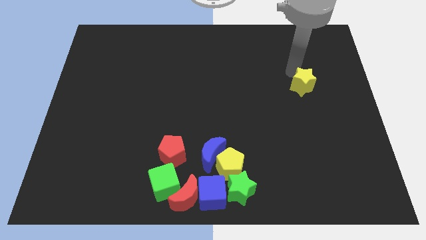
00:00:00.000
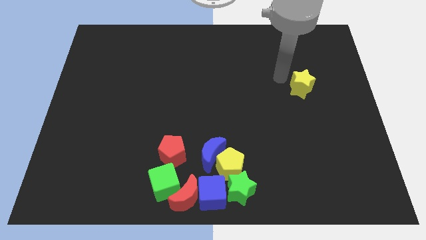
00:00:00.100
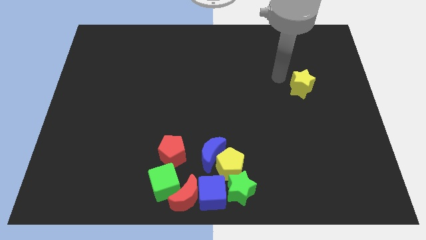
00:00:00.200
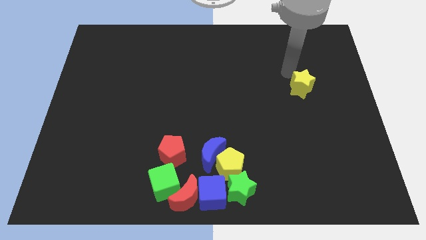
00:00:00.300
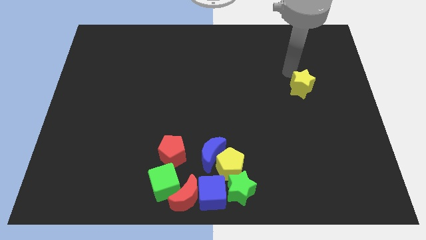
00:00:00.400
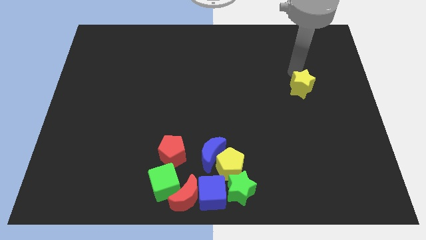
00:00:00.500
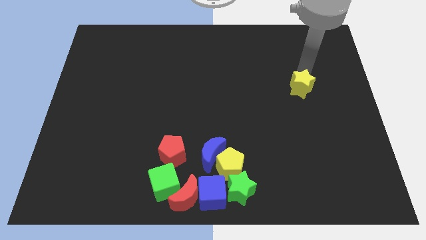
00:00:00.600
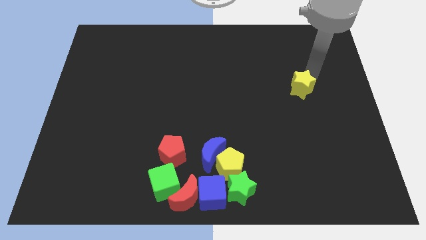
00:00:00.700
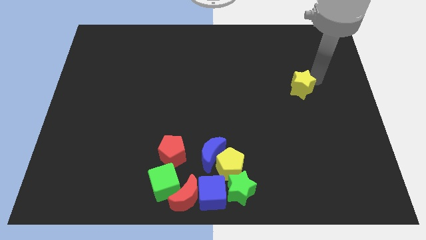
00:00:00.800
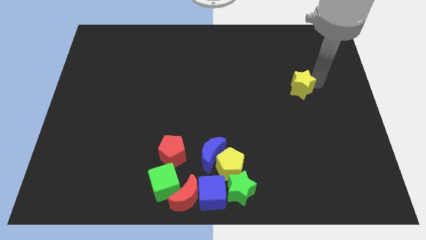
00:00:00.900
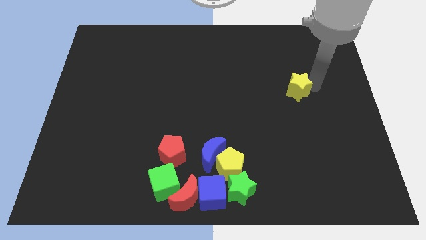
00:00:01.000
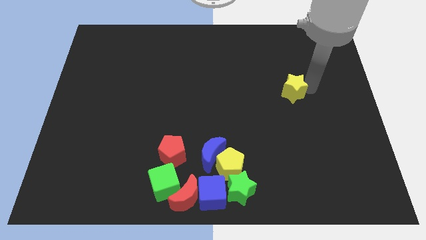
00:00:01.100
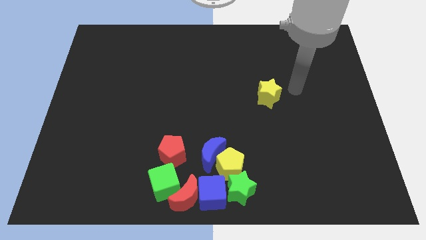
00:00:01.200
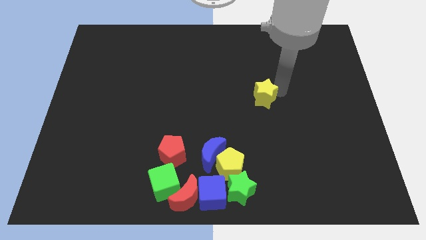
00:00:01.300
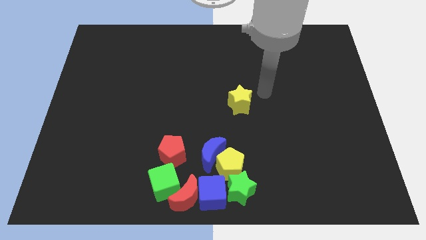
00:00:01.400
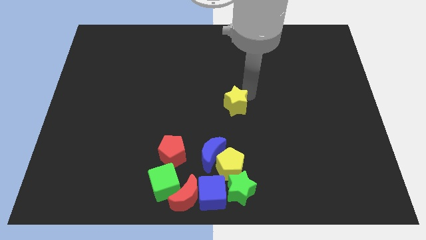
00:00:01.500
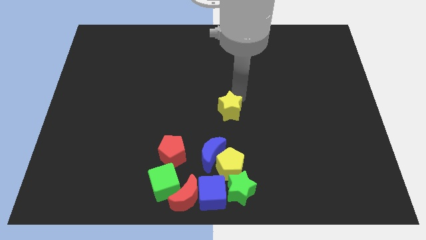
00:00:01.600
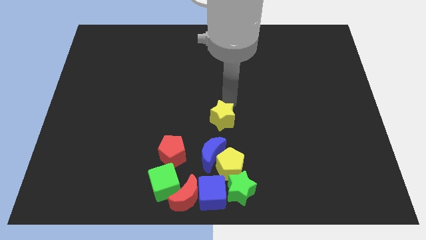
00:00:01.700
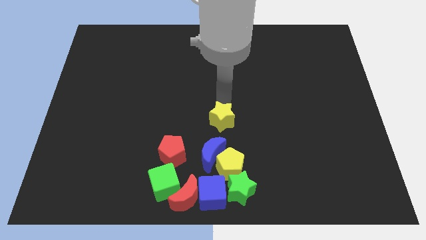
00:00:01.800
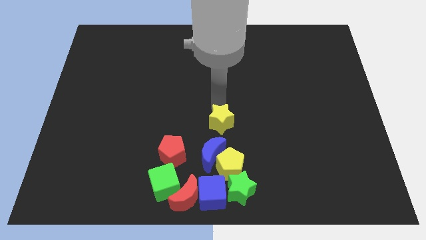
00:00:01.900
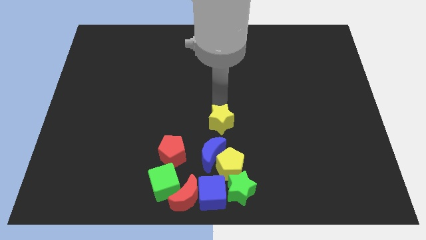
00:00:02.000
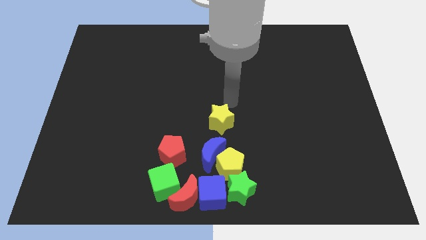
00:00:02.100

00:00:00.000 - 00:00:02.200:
move the yellow star above the blue crescent

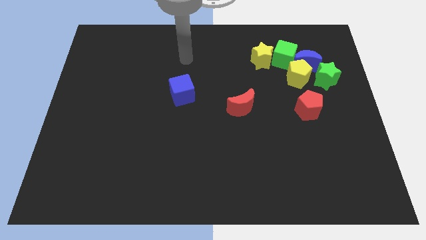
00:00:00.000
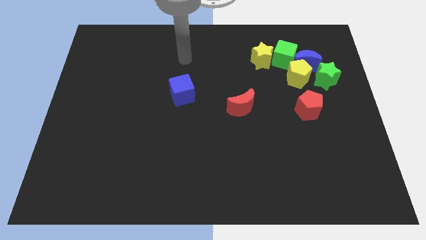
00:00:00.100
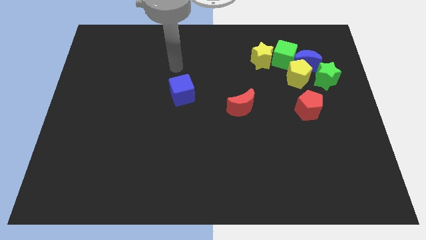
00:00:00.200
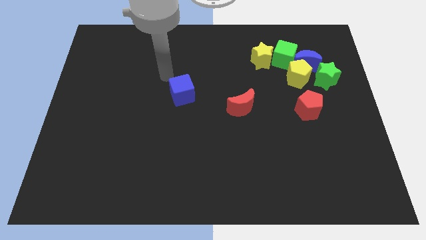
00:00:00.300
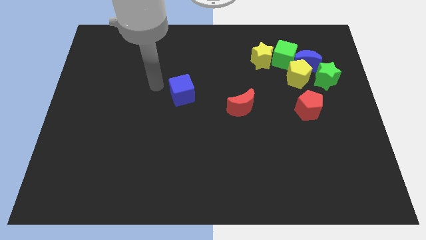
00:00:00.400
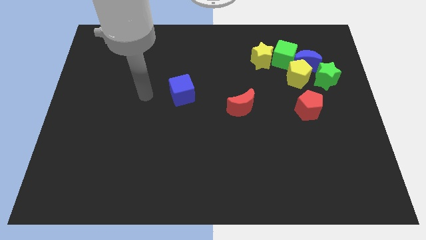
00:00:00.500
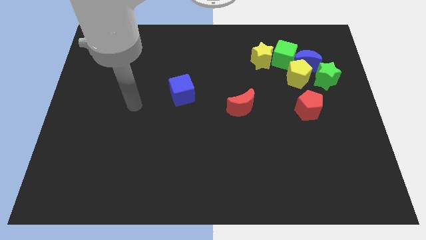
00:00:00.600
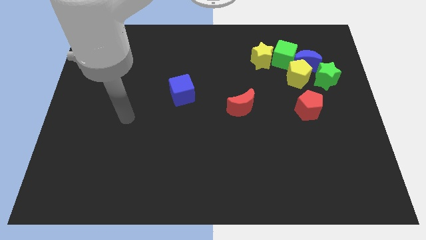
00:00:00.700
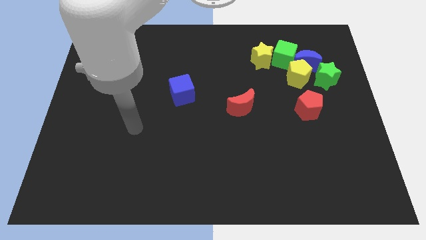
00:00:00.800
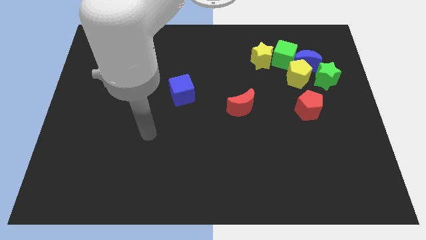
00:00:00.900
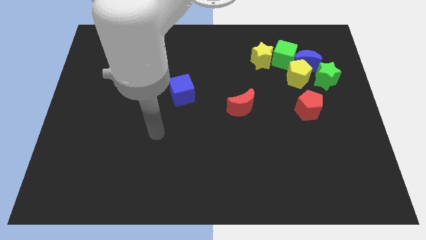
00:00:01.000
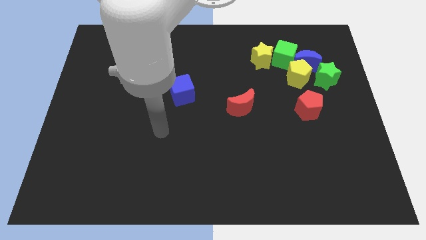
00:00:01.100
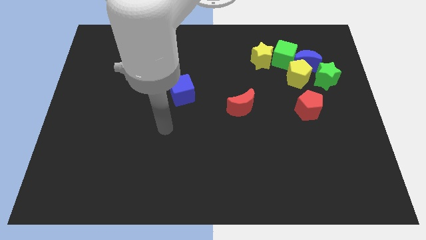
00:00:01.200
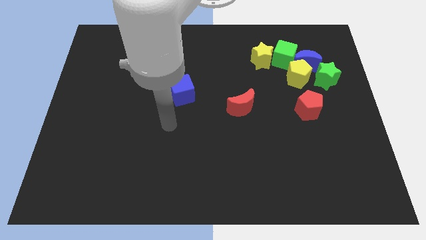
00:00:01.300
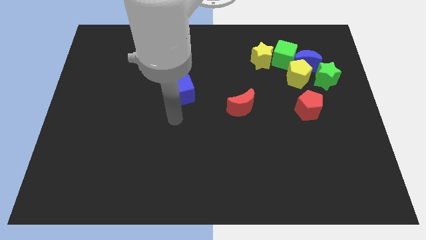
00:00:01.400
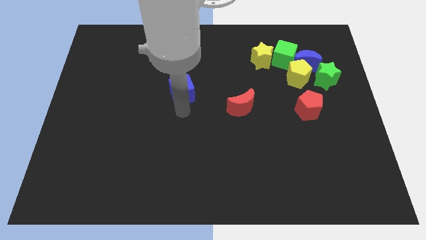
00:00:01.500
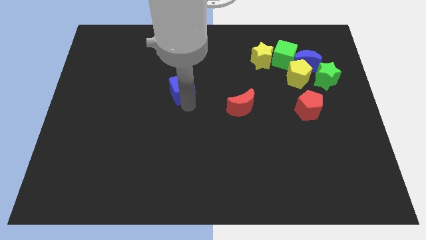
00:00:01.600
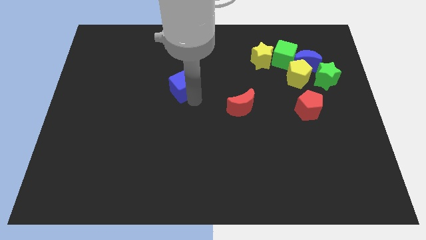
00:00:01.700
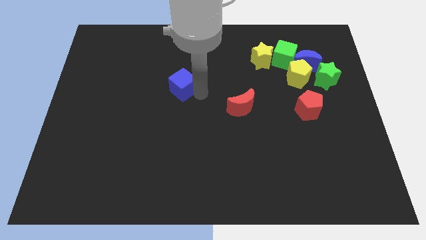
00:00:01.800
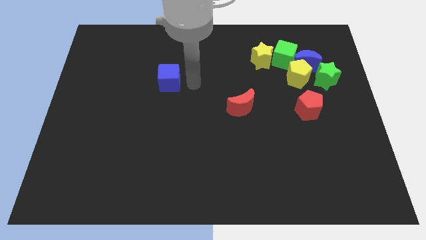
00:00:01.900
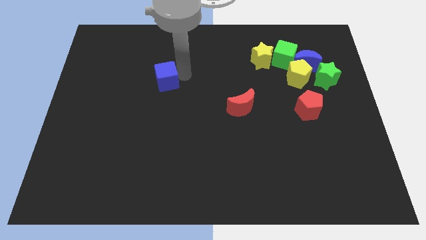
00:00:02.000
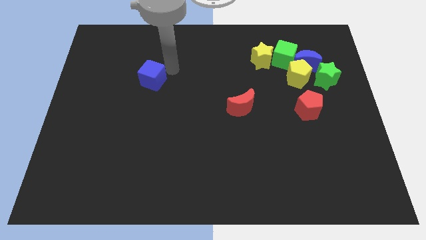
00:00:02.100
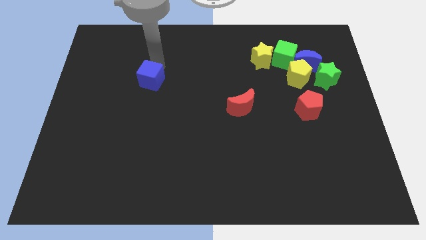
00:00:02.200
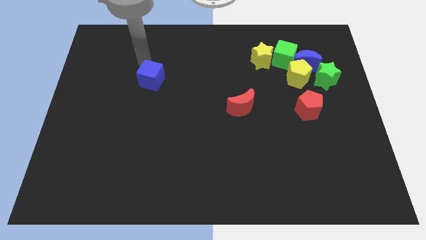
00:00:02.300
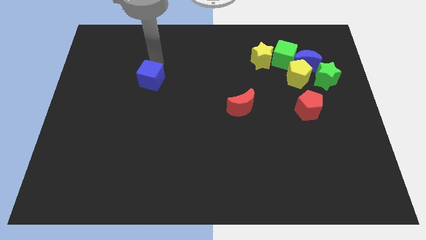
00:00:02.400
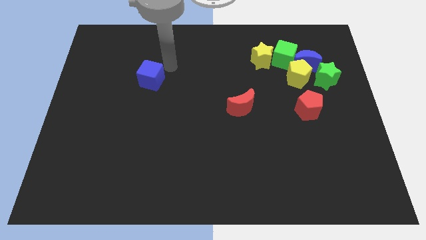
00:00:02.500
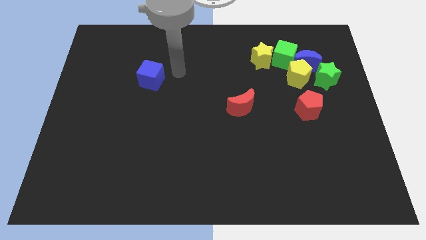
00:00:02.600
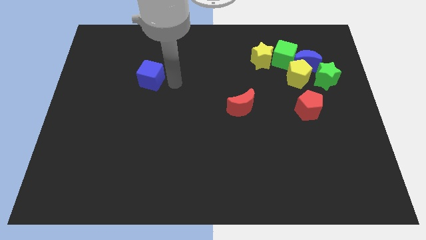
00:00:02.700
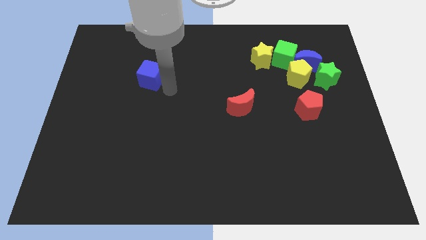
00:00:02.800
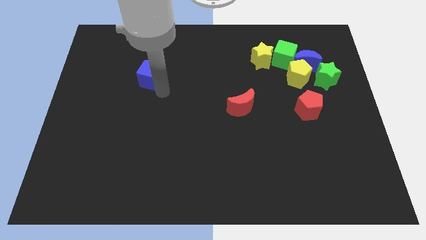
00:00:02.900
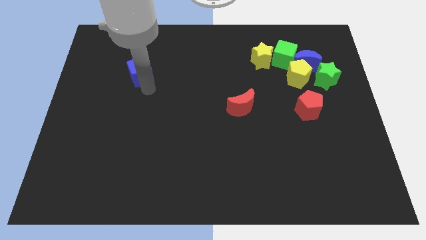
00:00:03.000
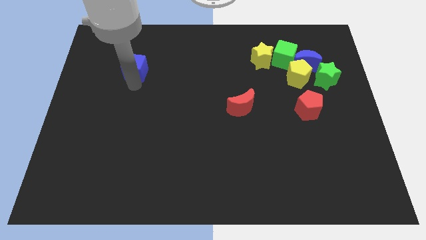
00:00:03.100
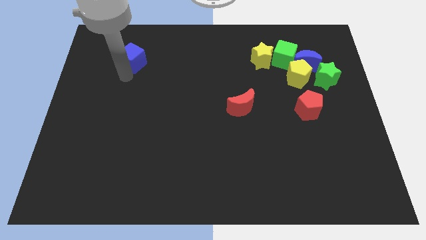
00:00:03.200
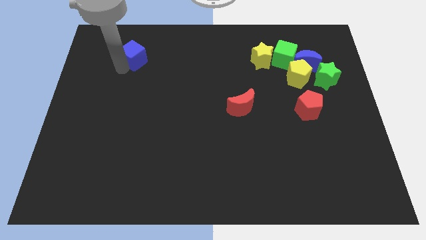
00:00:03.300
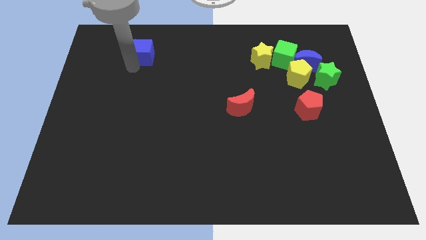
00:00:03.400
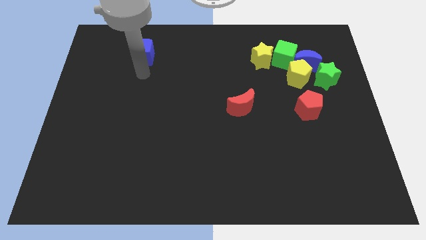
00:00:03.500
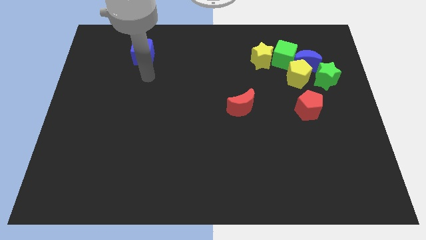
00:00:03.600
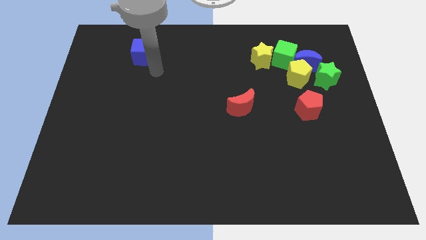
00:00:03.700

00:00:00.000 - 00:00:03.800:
move the blue cube slightly to the top of the board

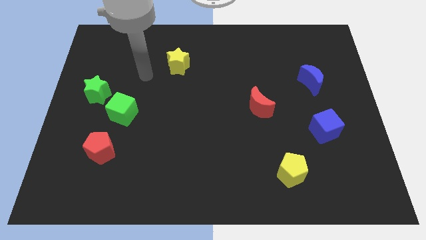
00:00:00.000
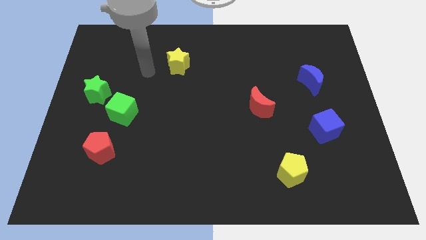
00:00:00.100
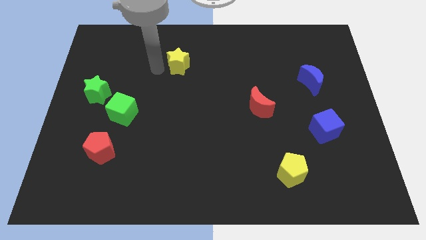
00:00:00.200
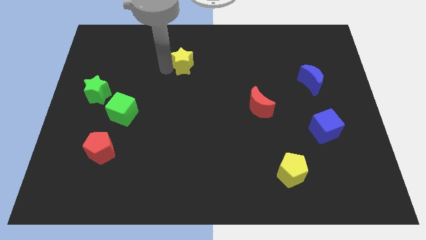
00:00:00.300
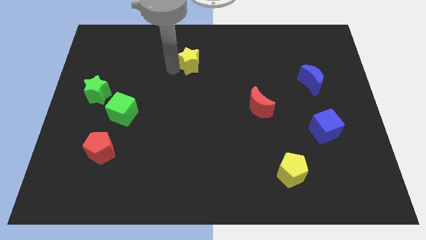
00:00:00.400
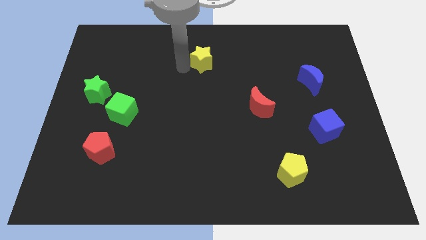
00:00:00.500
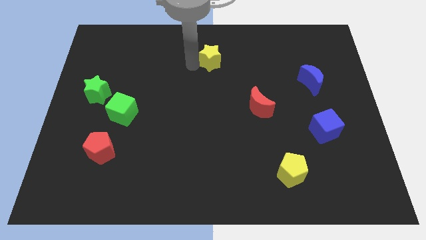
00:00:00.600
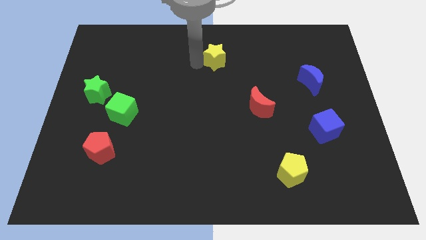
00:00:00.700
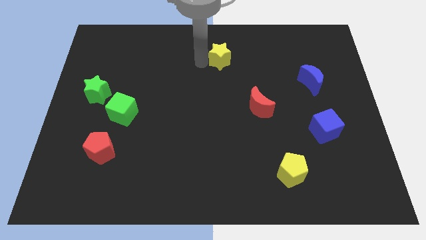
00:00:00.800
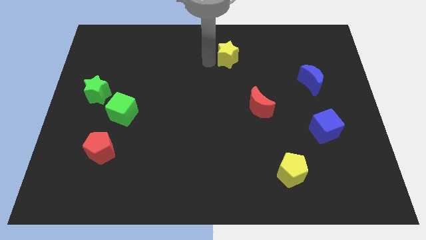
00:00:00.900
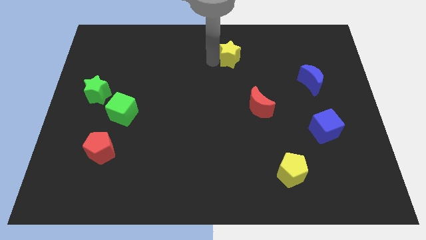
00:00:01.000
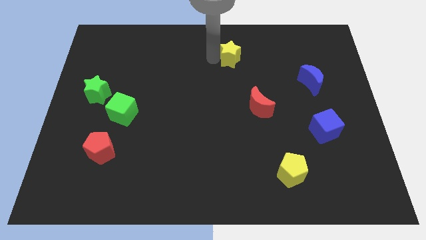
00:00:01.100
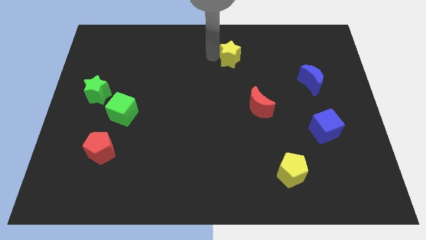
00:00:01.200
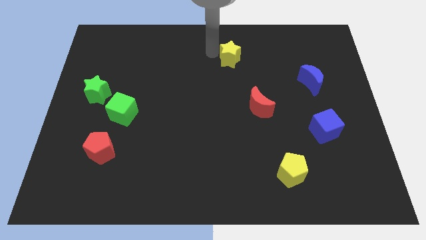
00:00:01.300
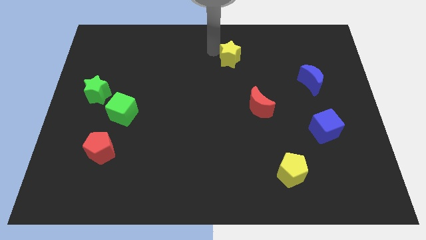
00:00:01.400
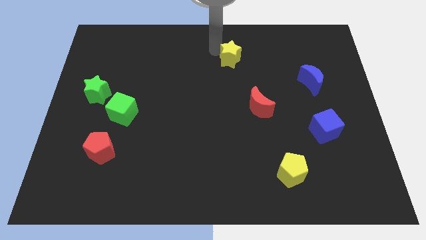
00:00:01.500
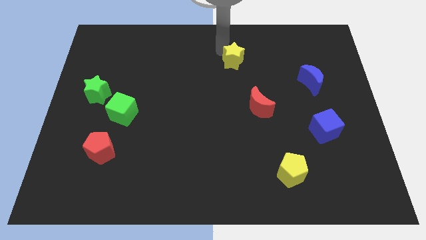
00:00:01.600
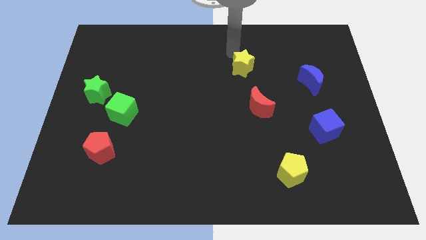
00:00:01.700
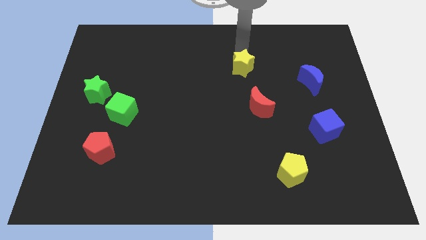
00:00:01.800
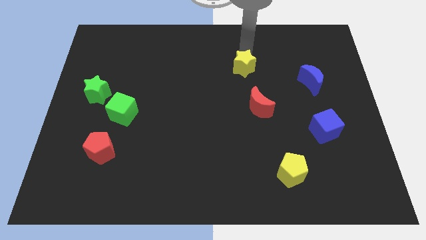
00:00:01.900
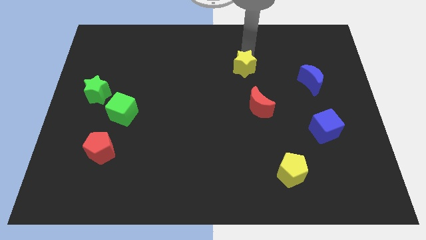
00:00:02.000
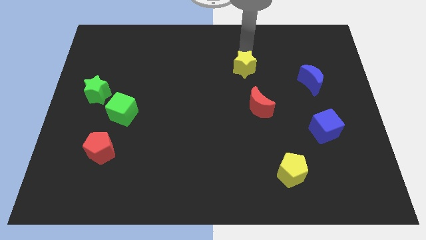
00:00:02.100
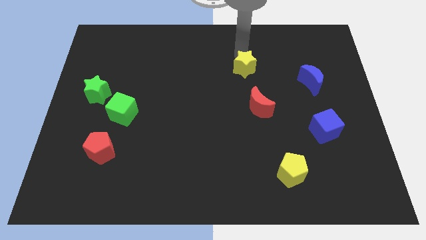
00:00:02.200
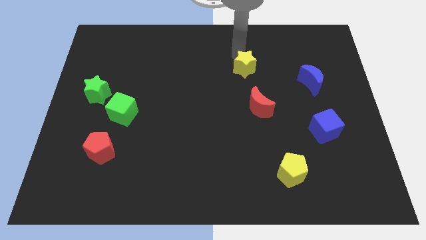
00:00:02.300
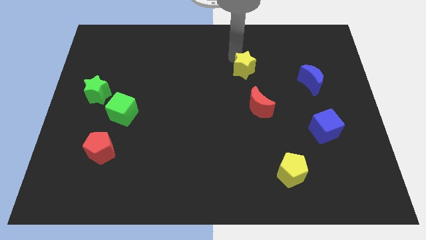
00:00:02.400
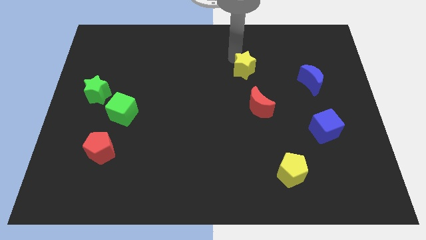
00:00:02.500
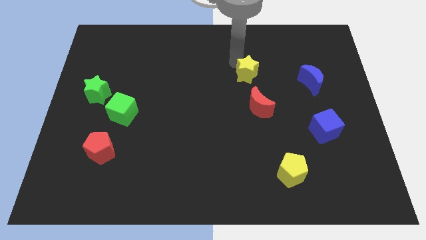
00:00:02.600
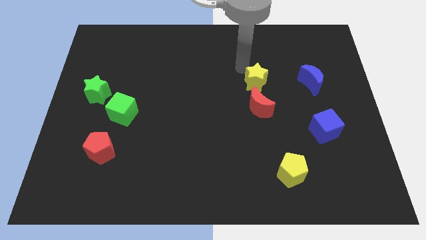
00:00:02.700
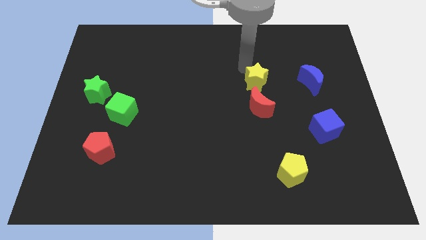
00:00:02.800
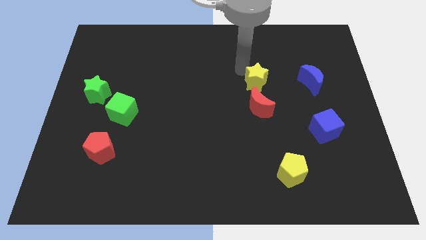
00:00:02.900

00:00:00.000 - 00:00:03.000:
place the yellow star above the red moon

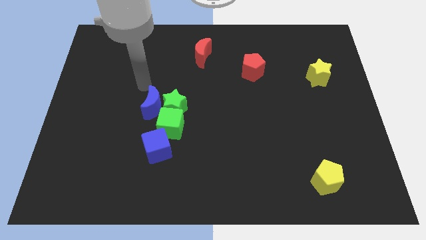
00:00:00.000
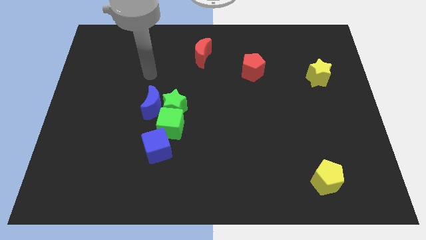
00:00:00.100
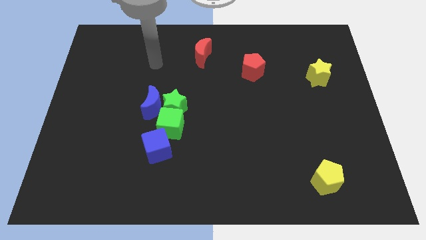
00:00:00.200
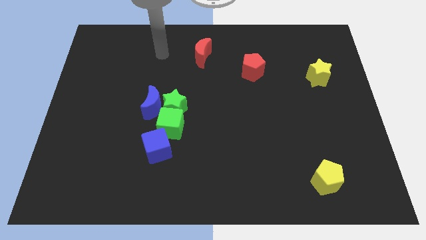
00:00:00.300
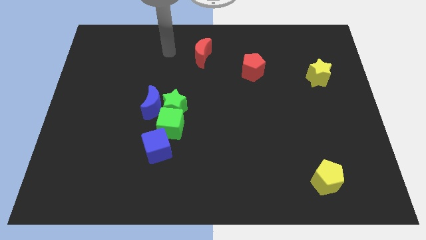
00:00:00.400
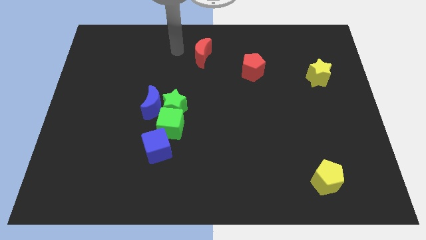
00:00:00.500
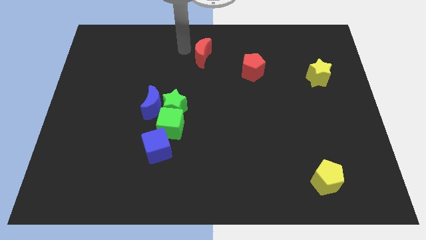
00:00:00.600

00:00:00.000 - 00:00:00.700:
drag your arm towards red crescent
